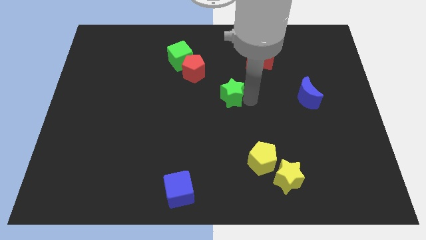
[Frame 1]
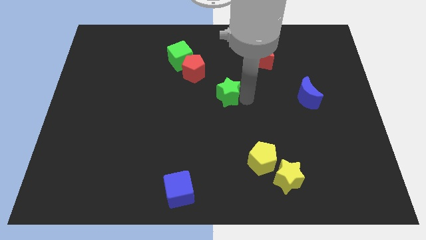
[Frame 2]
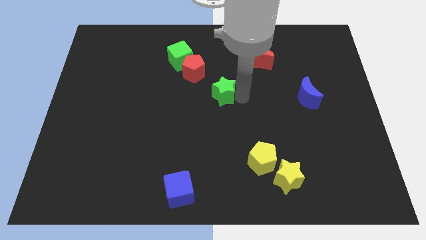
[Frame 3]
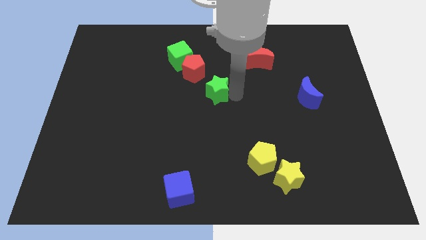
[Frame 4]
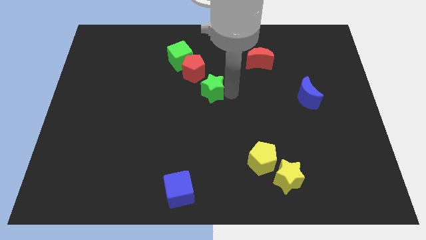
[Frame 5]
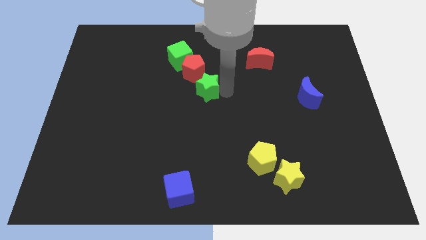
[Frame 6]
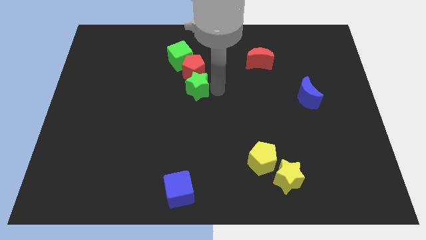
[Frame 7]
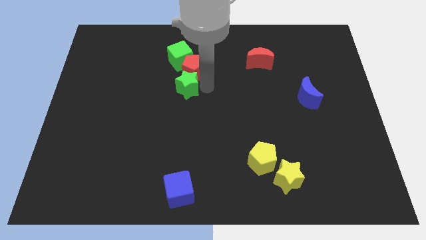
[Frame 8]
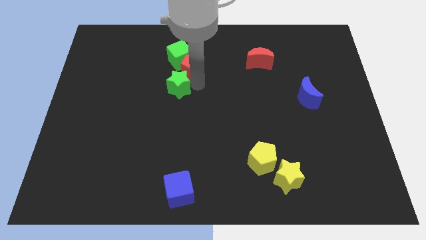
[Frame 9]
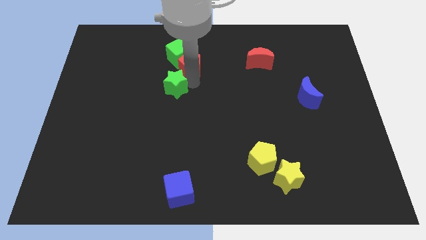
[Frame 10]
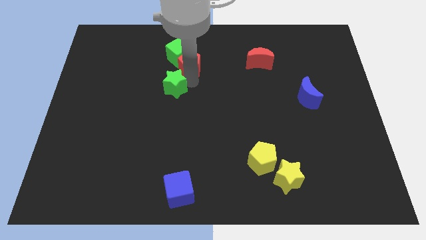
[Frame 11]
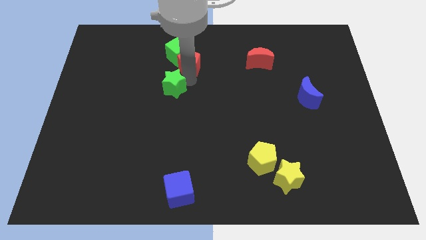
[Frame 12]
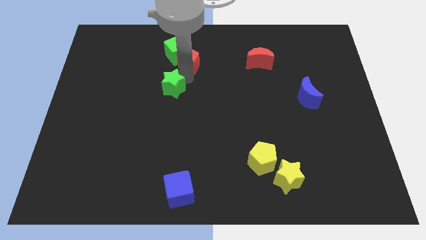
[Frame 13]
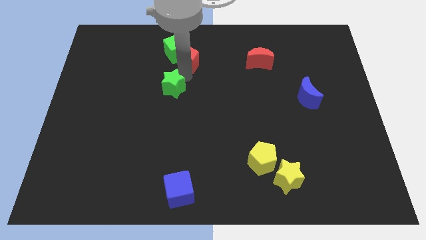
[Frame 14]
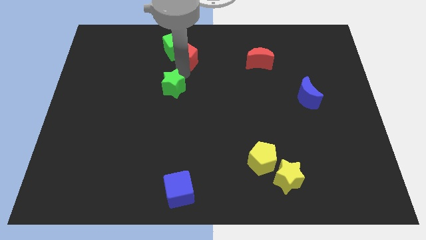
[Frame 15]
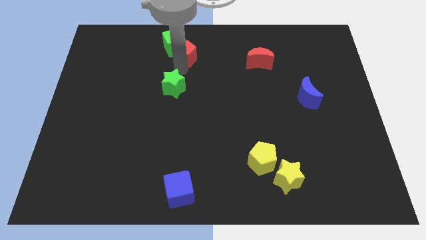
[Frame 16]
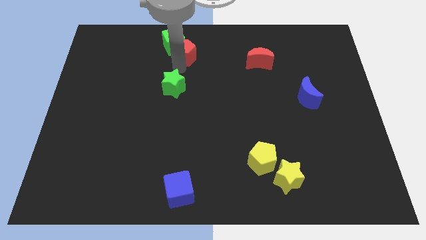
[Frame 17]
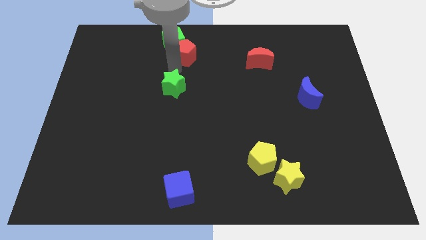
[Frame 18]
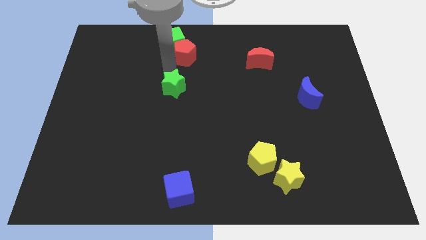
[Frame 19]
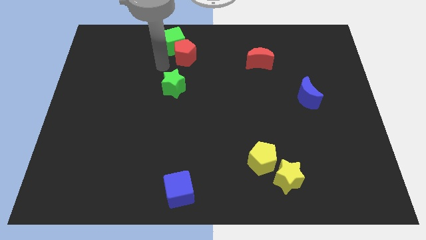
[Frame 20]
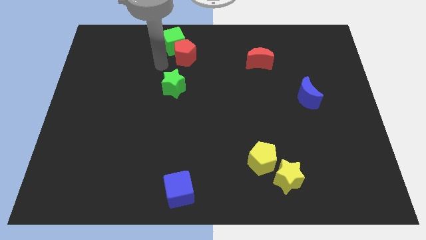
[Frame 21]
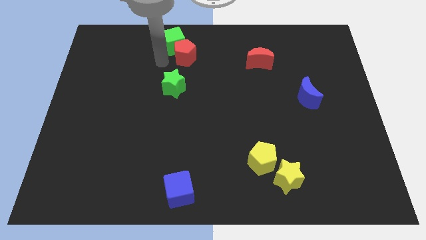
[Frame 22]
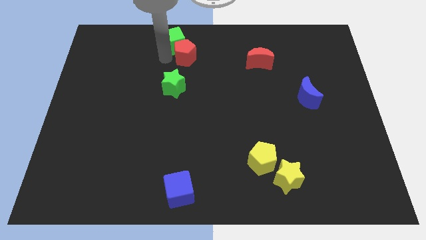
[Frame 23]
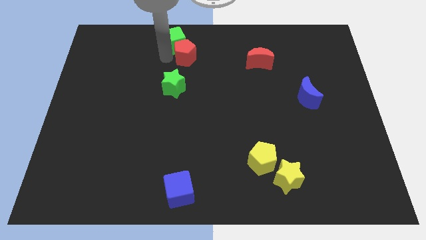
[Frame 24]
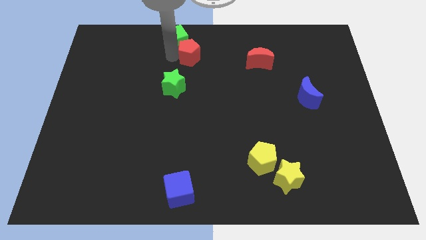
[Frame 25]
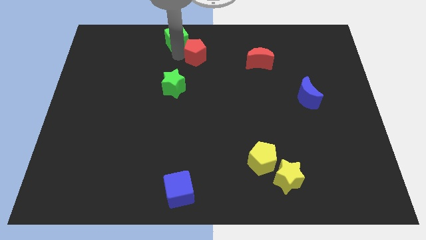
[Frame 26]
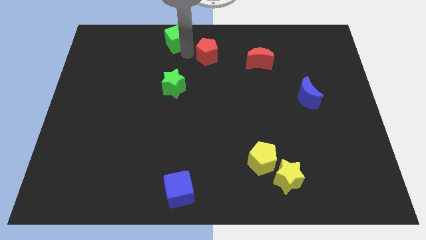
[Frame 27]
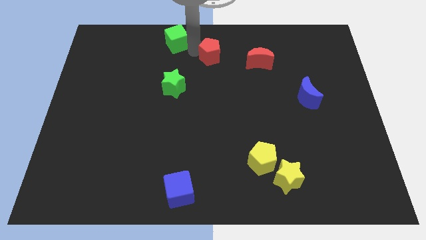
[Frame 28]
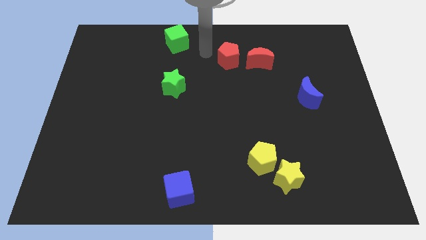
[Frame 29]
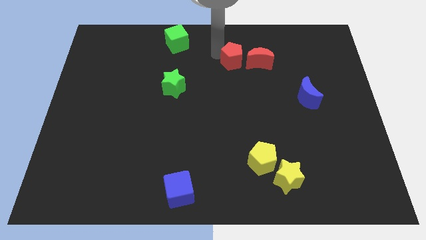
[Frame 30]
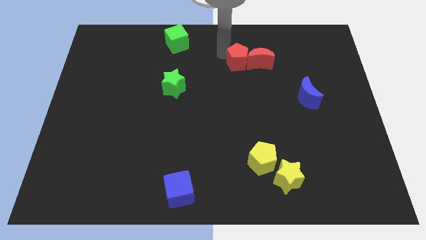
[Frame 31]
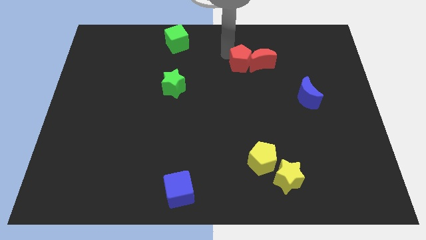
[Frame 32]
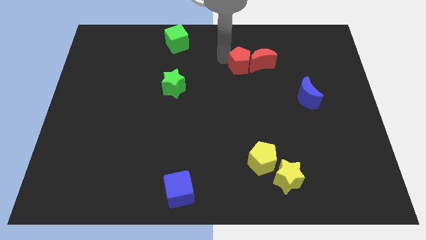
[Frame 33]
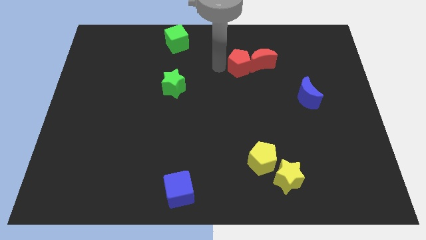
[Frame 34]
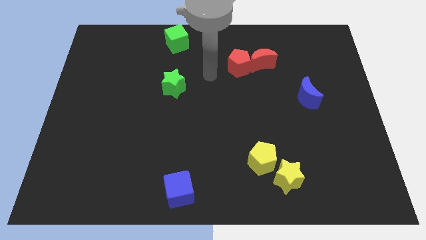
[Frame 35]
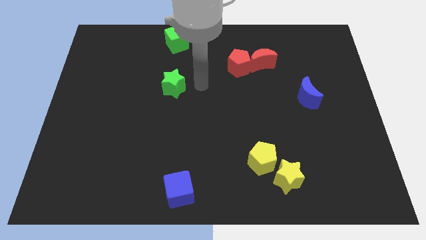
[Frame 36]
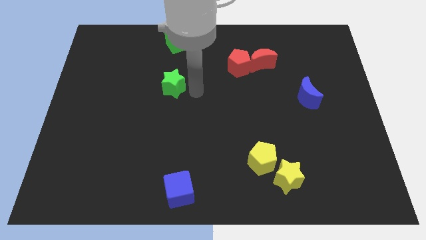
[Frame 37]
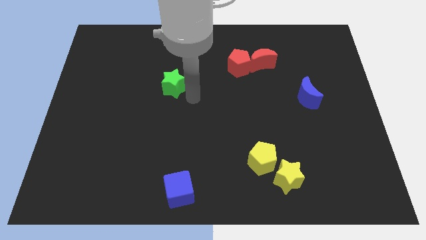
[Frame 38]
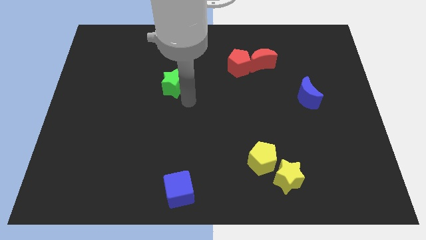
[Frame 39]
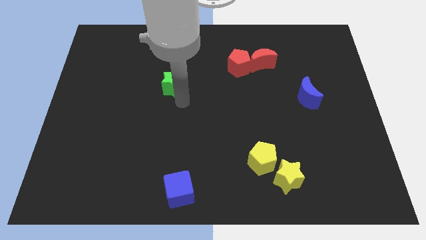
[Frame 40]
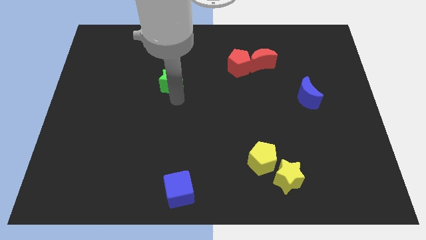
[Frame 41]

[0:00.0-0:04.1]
push the red pentagon close to the red moon

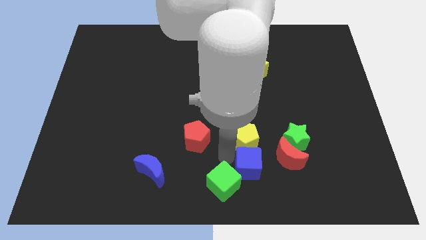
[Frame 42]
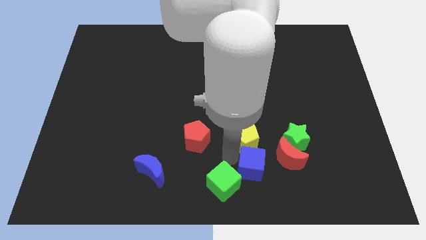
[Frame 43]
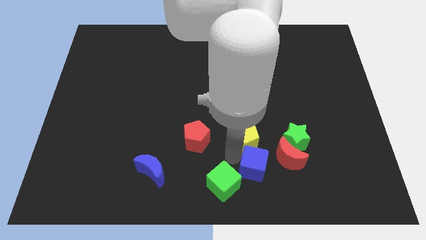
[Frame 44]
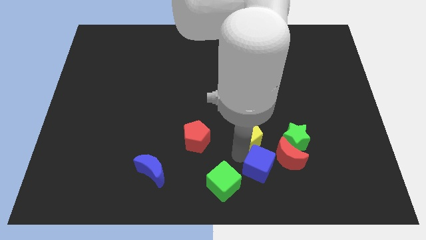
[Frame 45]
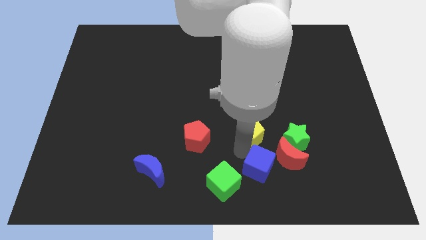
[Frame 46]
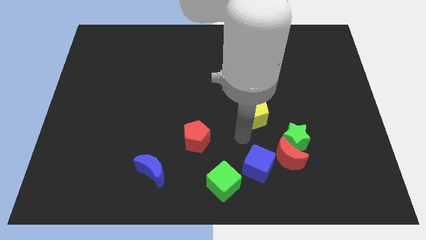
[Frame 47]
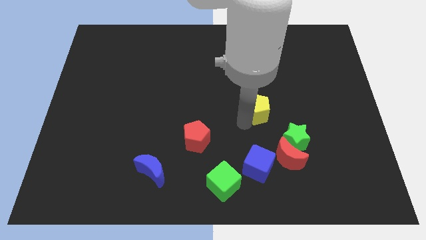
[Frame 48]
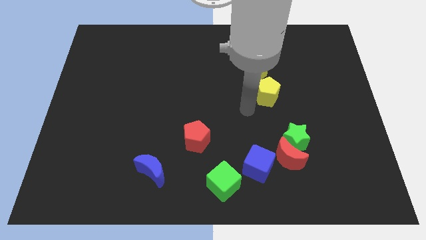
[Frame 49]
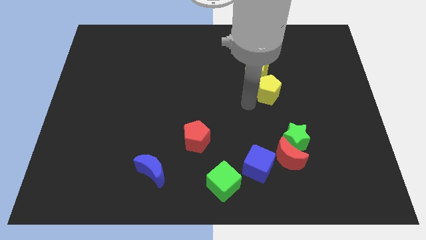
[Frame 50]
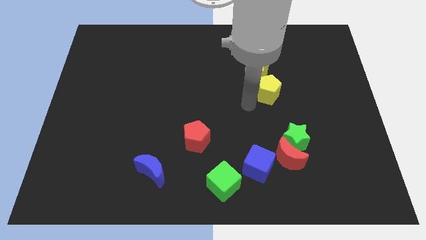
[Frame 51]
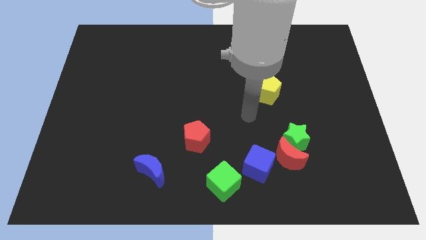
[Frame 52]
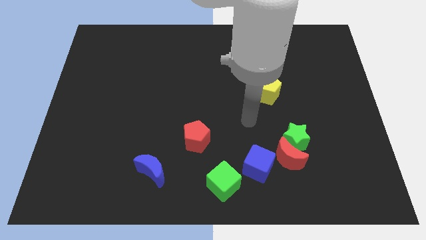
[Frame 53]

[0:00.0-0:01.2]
move the yellow pentagon slightly up towards the top center

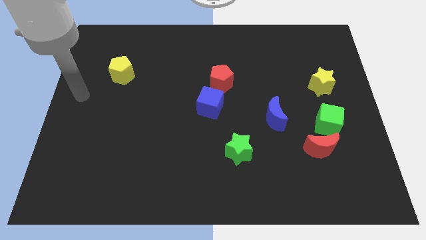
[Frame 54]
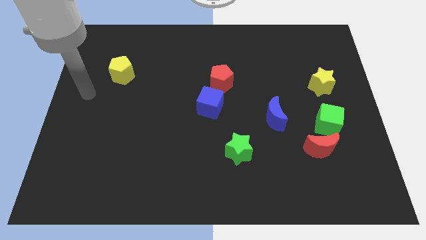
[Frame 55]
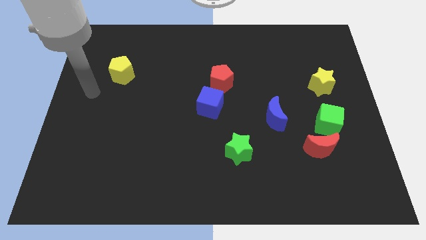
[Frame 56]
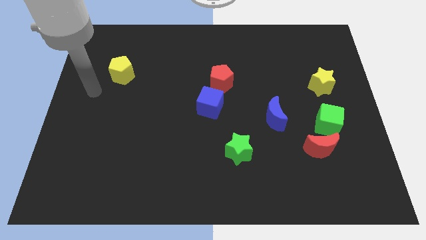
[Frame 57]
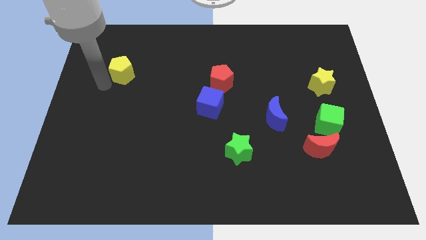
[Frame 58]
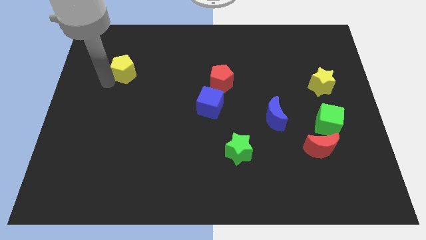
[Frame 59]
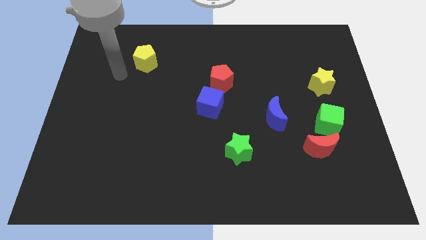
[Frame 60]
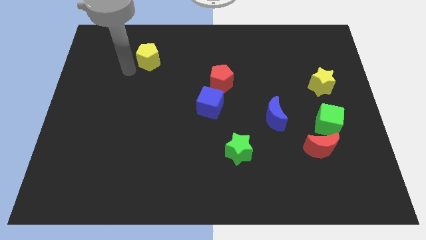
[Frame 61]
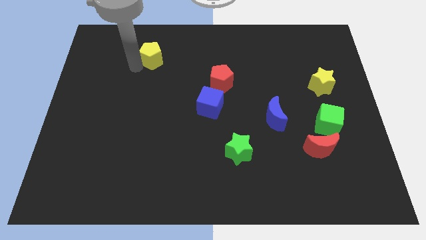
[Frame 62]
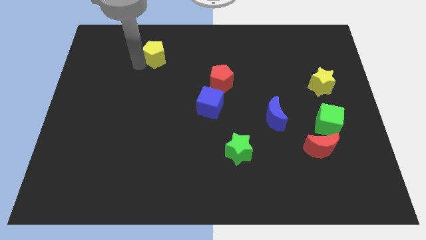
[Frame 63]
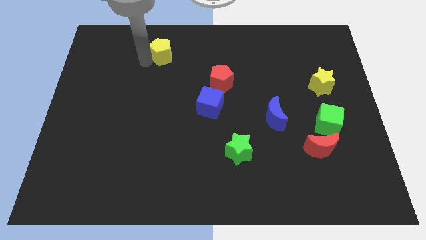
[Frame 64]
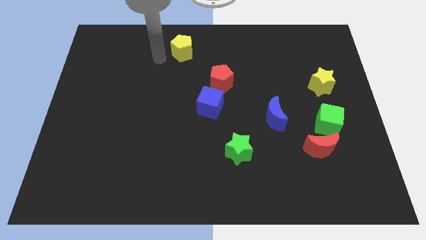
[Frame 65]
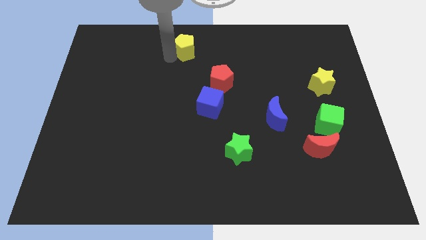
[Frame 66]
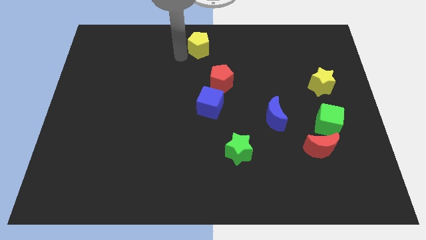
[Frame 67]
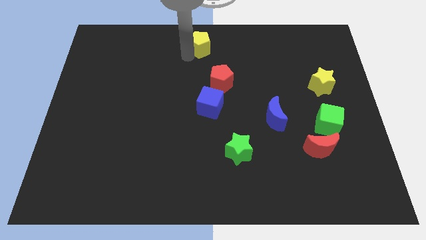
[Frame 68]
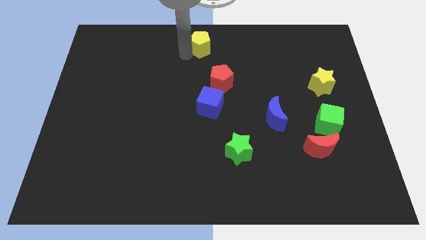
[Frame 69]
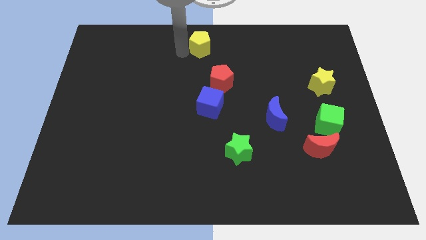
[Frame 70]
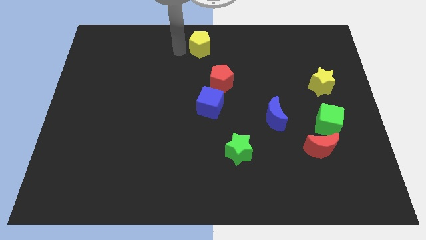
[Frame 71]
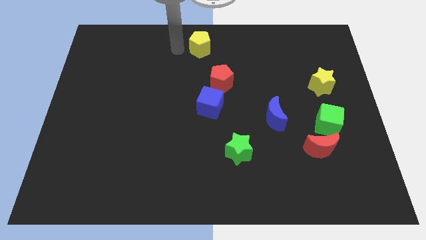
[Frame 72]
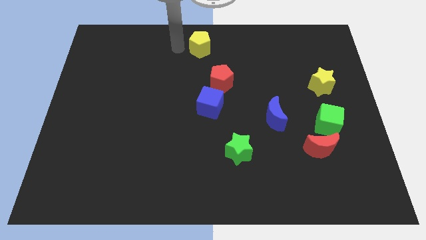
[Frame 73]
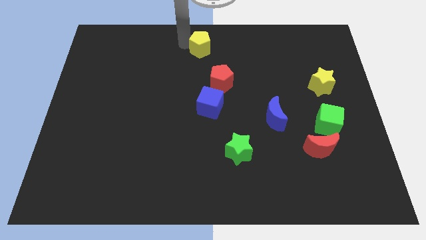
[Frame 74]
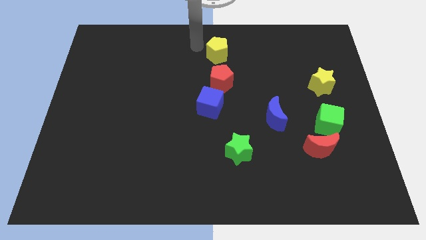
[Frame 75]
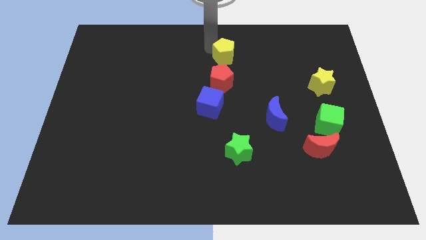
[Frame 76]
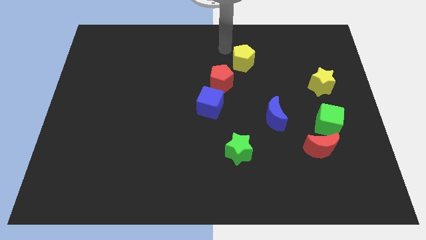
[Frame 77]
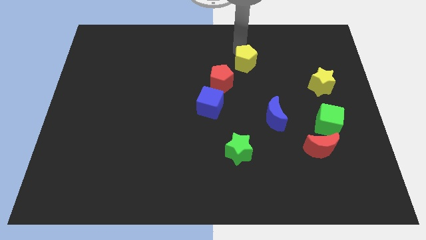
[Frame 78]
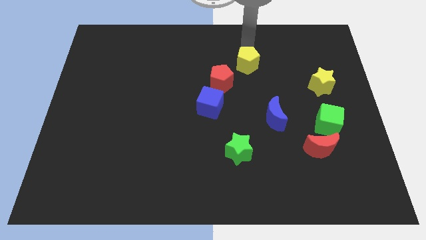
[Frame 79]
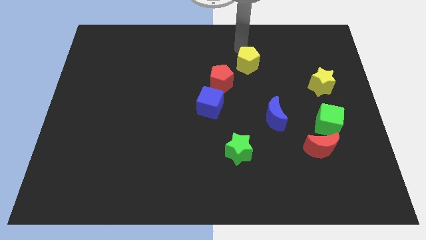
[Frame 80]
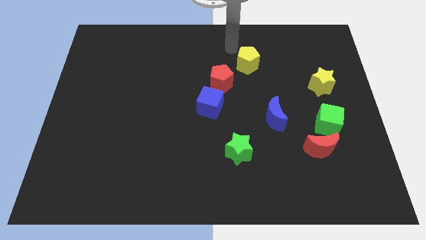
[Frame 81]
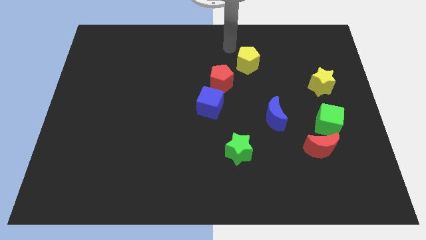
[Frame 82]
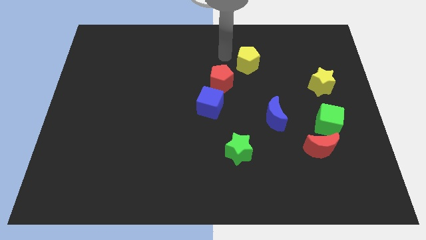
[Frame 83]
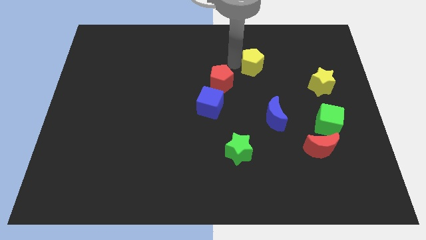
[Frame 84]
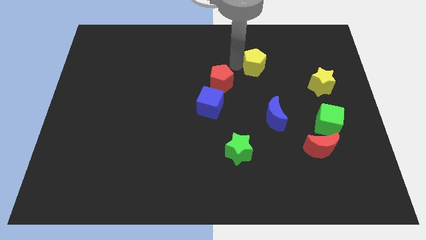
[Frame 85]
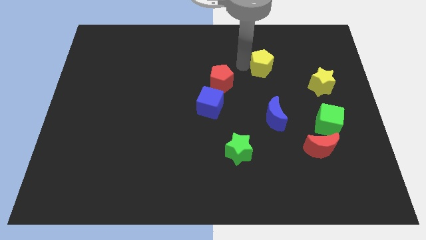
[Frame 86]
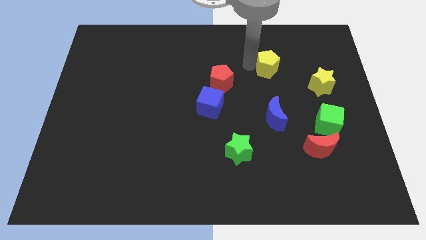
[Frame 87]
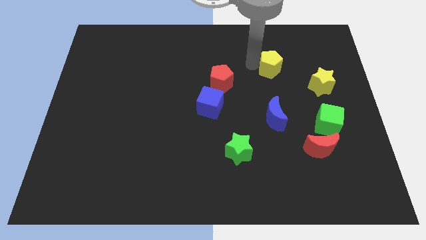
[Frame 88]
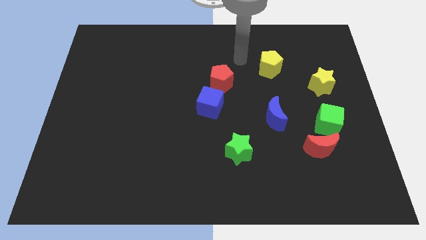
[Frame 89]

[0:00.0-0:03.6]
place the yellow pentagon on the above of the blue moon
